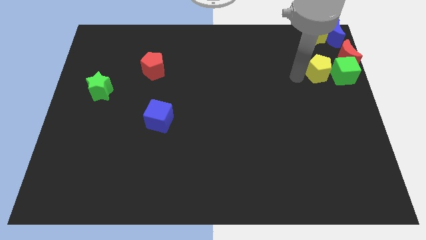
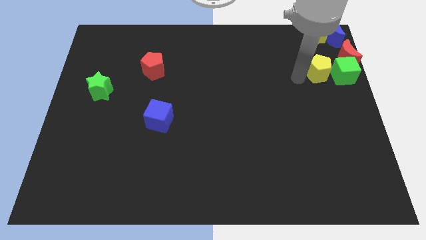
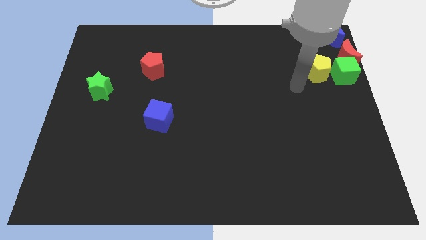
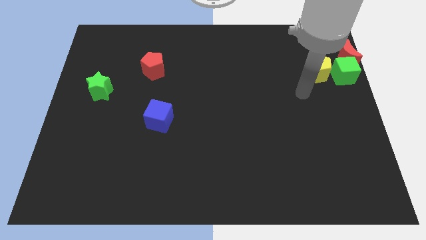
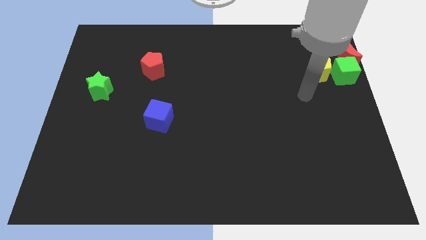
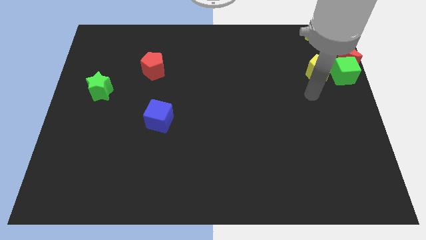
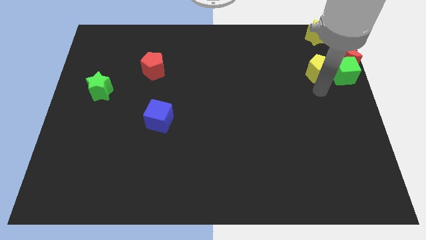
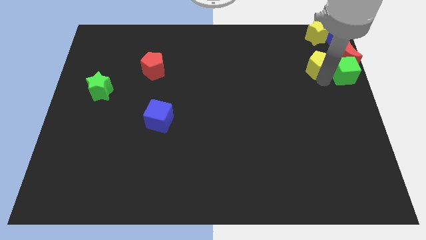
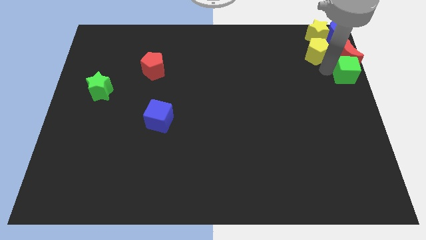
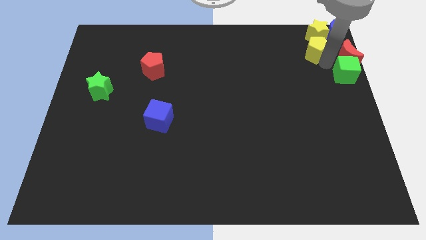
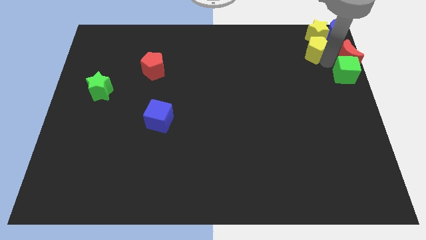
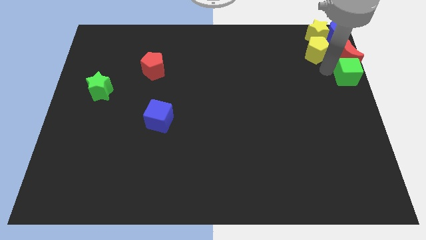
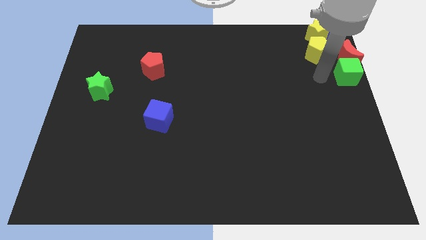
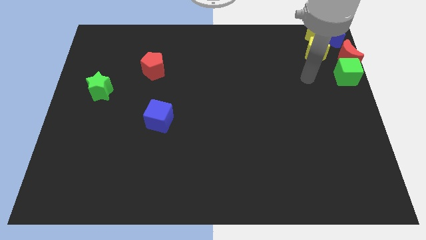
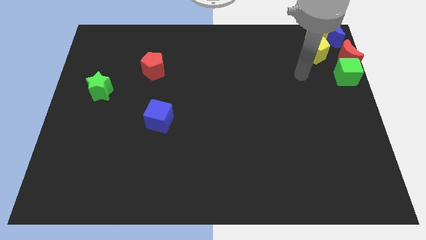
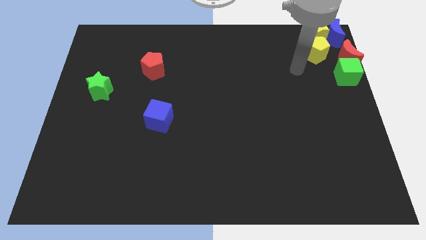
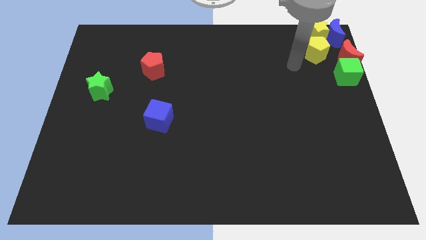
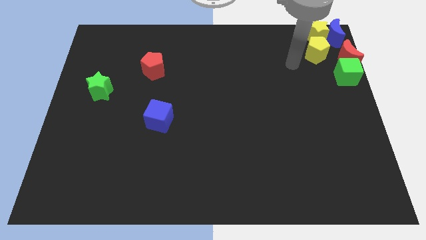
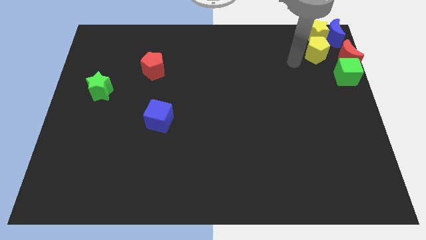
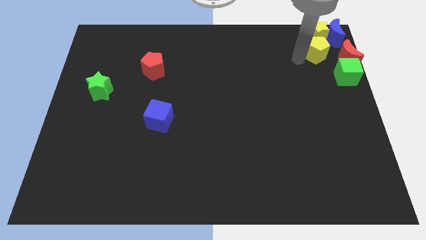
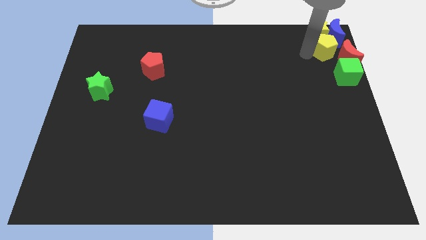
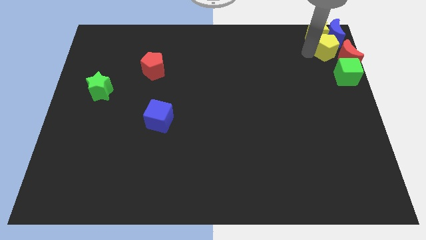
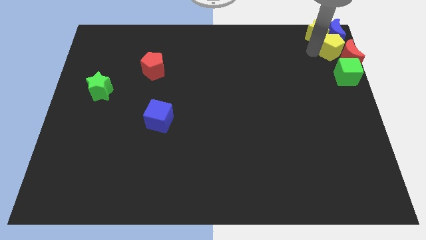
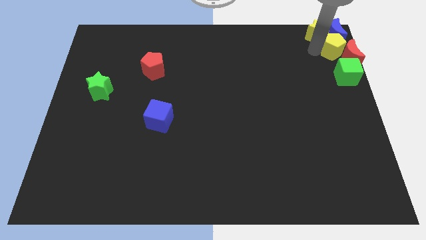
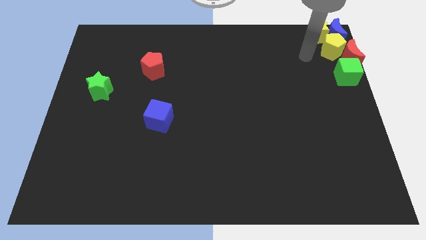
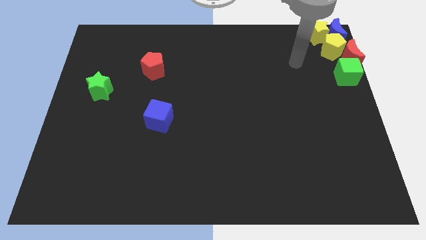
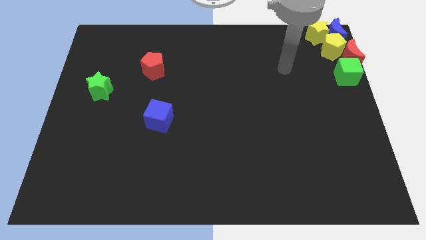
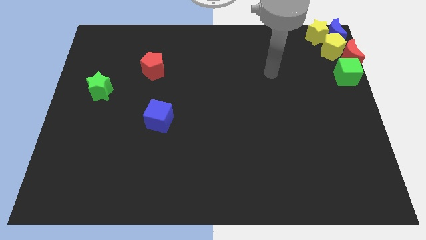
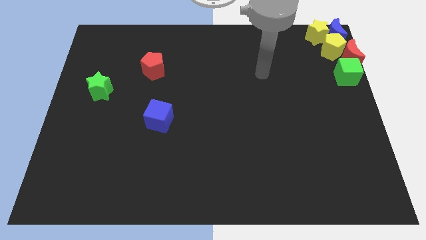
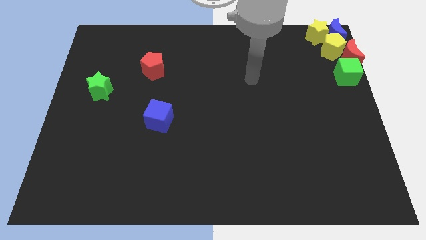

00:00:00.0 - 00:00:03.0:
move the yellow pentagon away from the green cube

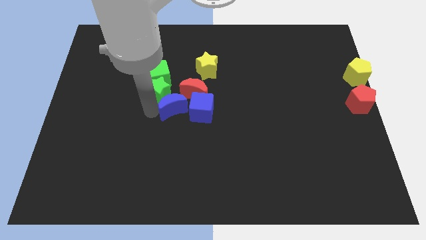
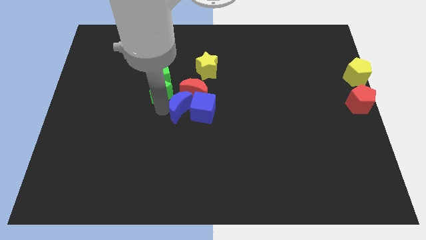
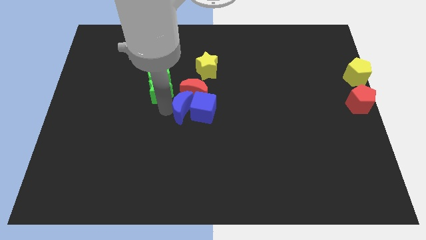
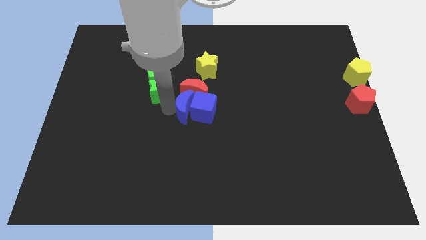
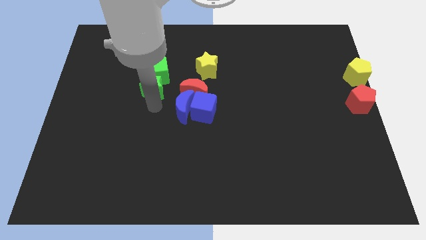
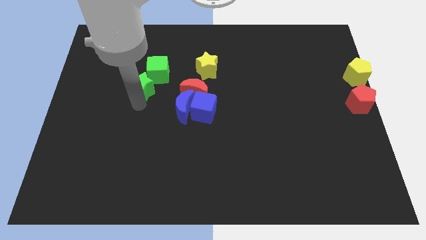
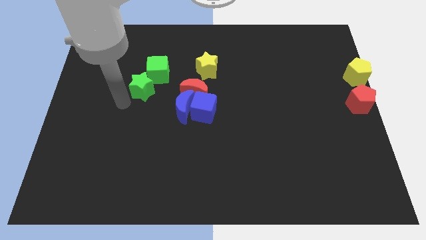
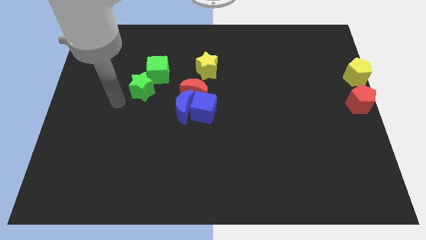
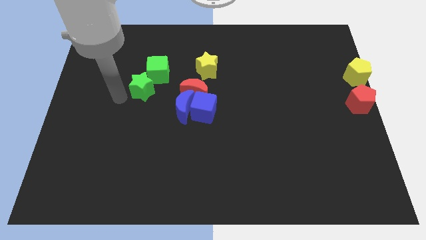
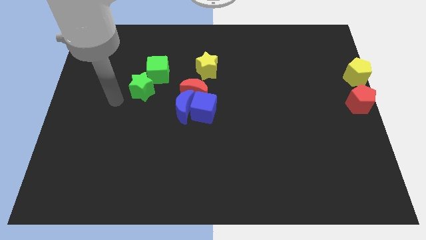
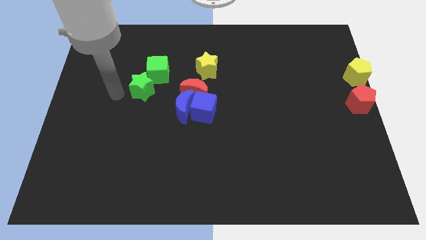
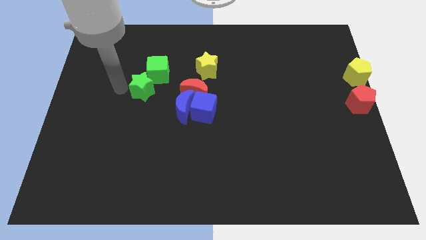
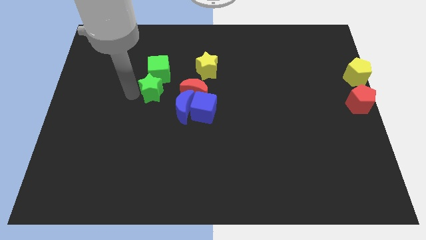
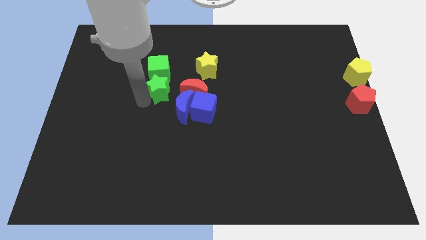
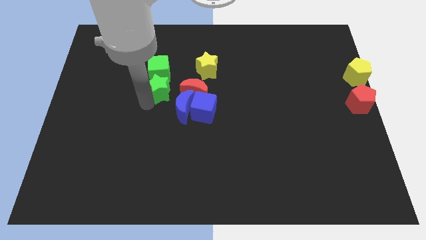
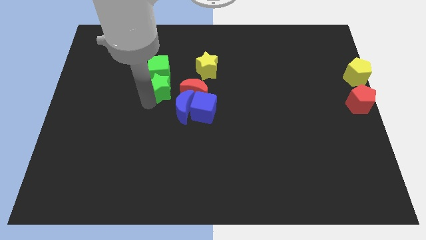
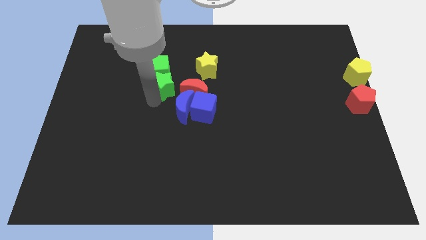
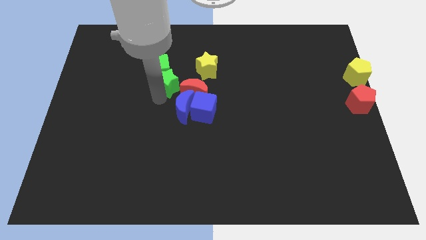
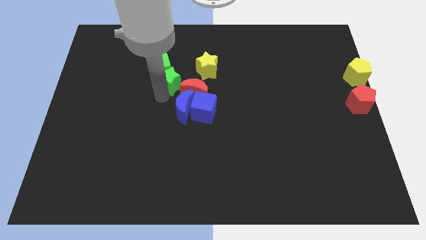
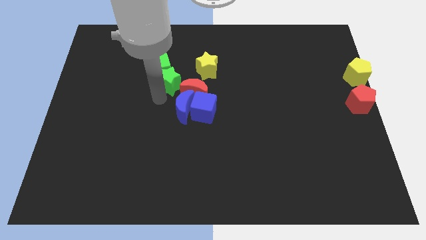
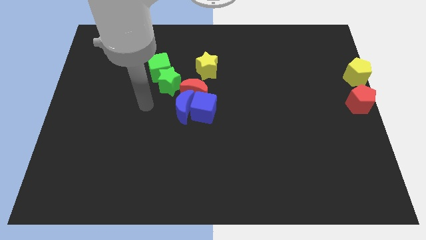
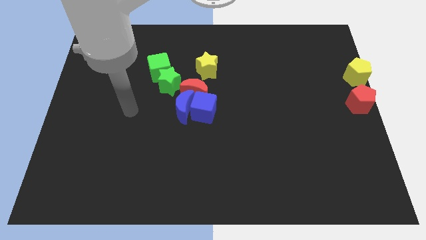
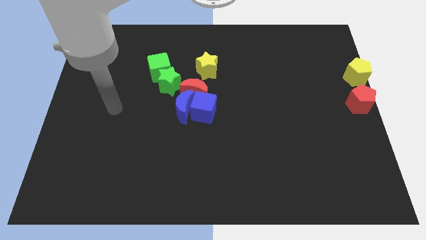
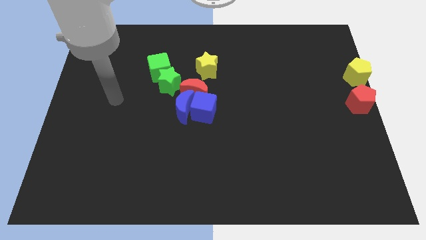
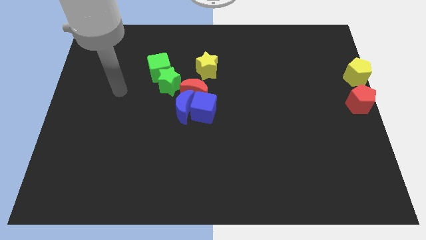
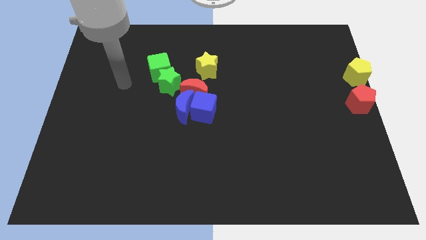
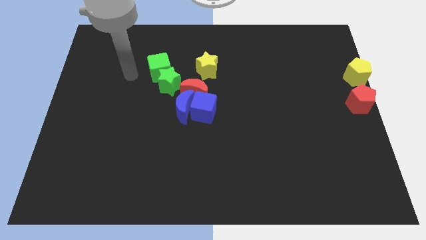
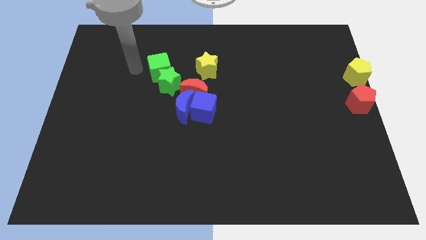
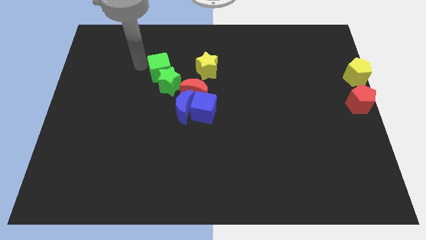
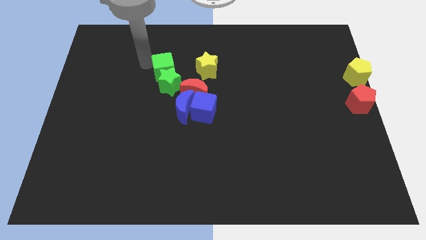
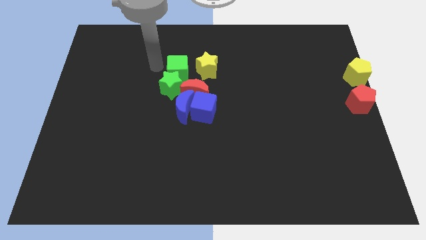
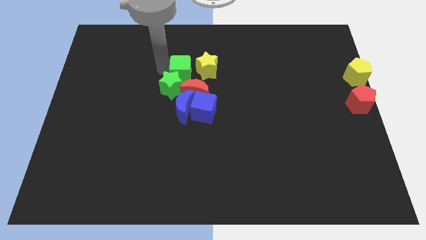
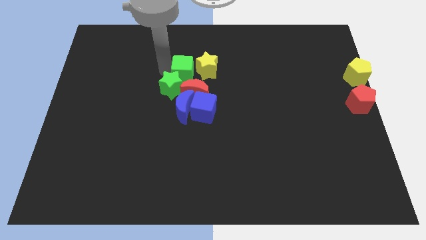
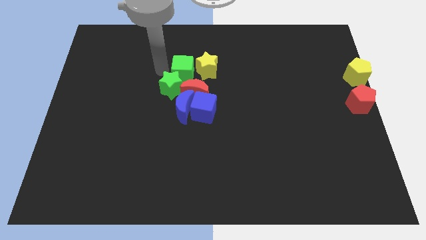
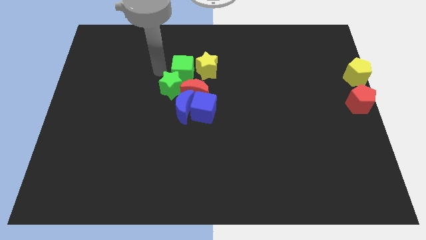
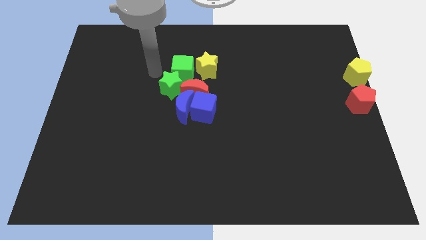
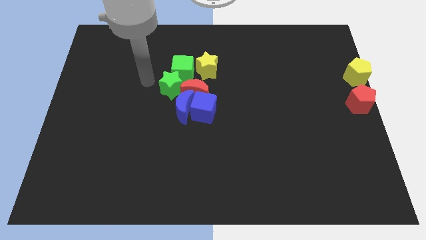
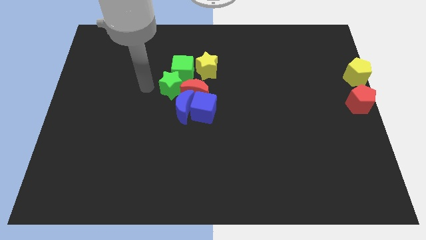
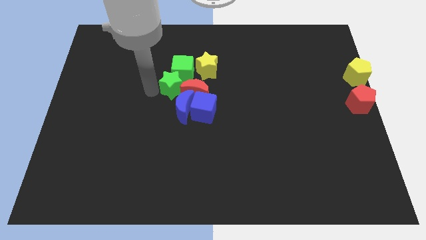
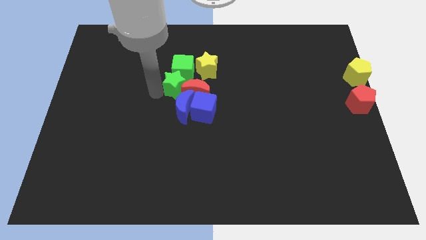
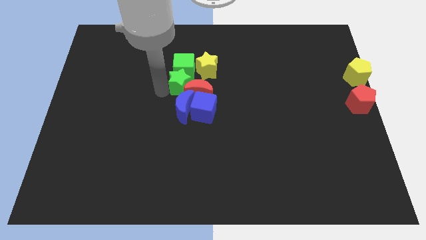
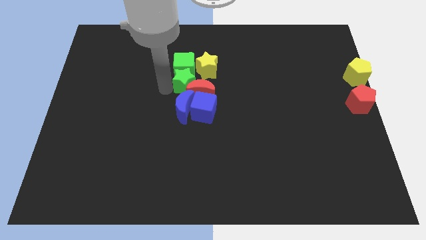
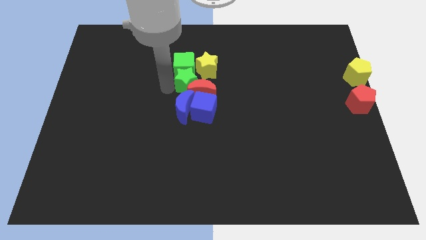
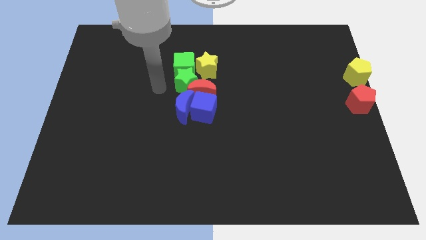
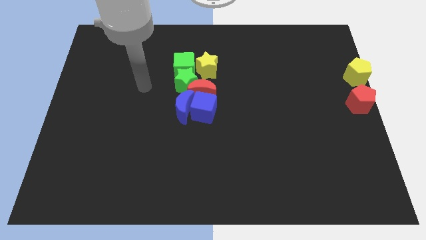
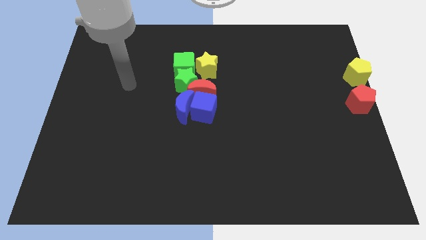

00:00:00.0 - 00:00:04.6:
push the group of blocks towards the center

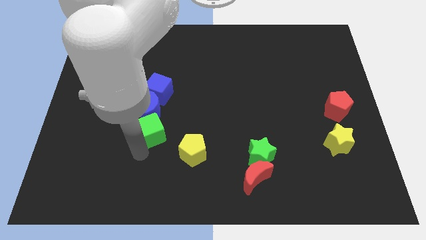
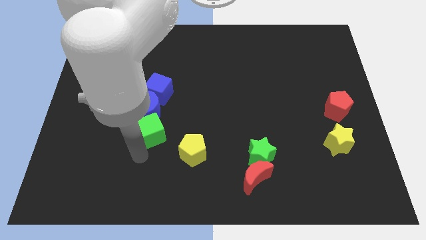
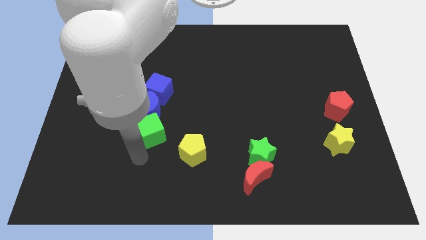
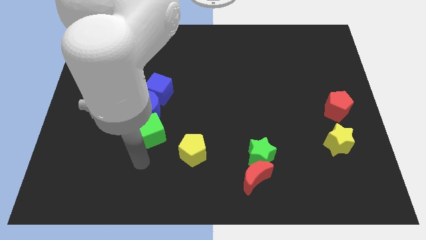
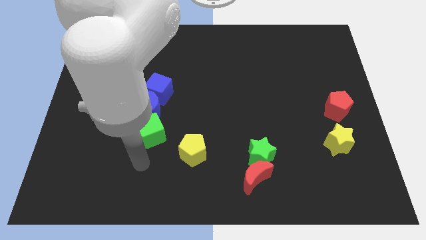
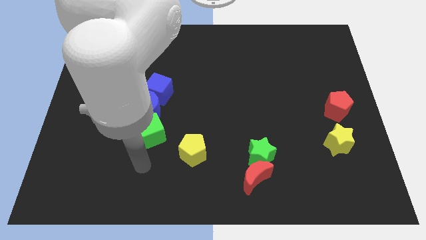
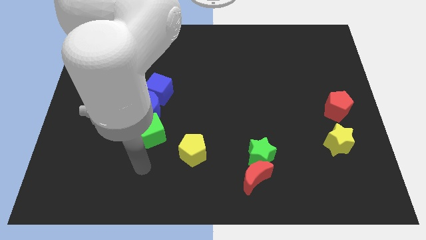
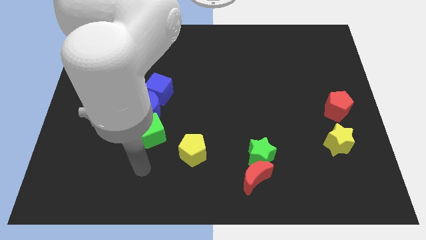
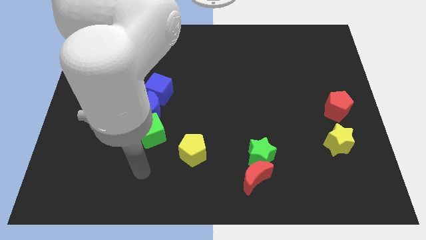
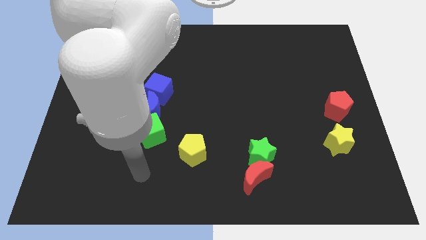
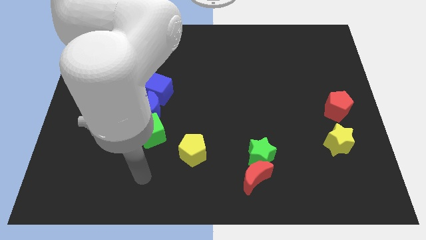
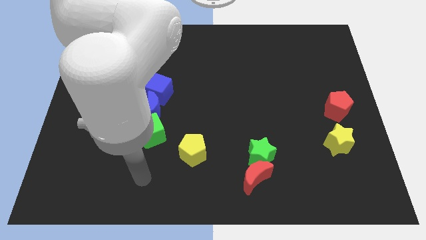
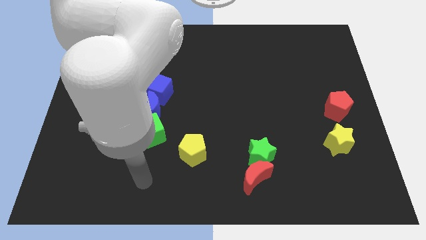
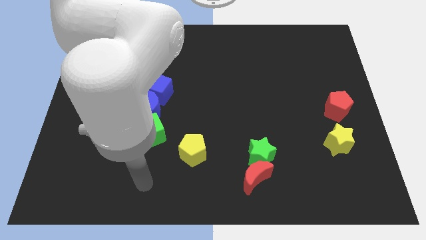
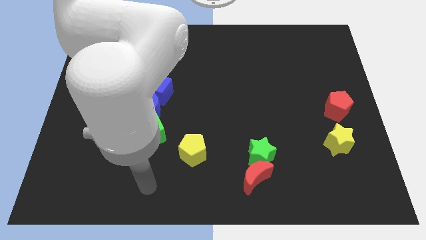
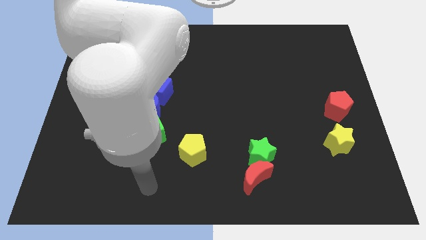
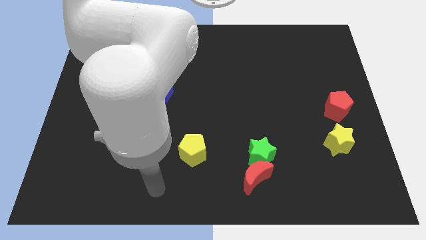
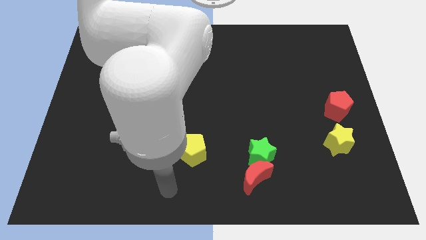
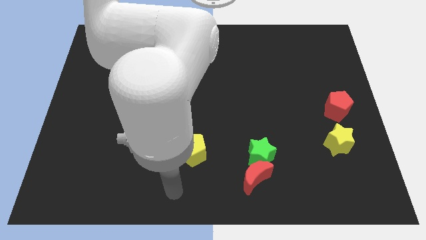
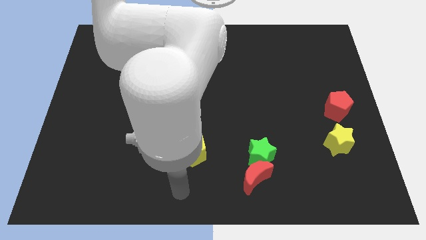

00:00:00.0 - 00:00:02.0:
move your arm towards the bottom center of the board
